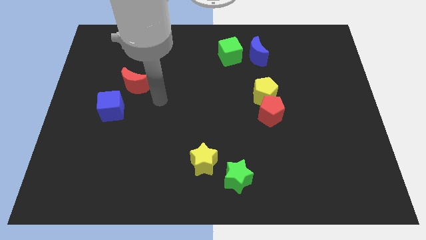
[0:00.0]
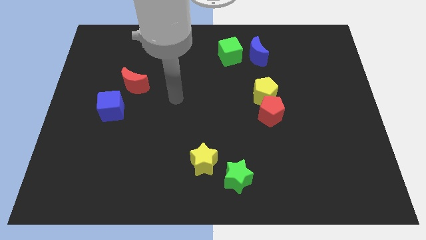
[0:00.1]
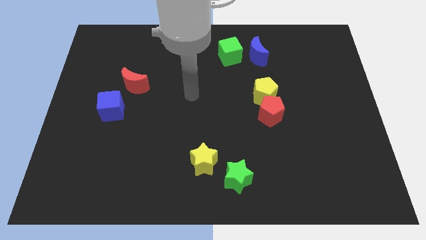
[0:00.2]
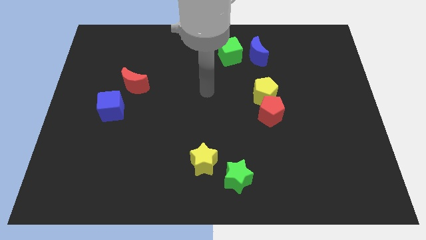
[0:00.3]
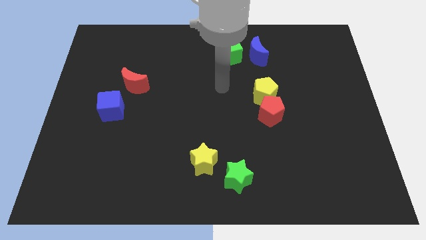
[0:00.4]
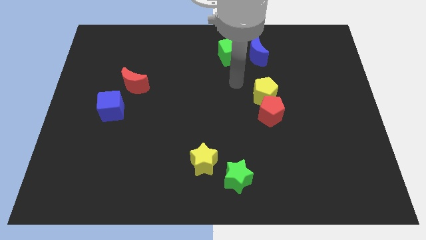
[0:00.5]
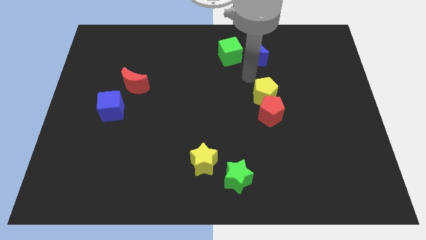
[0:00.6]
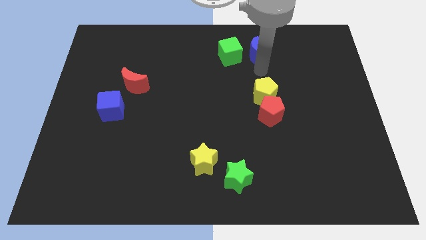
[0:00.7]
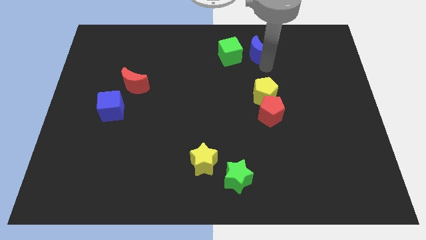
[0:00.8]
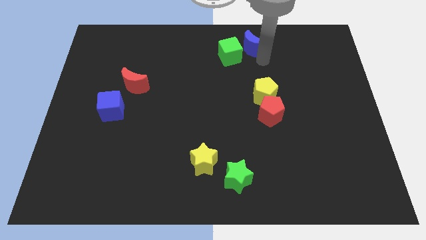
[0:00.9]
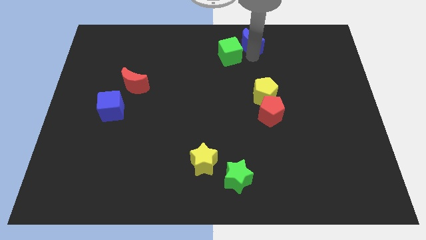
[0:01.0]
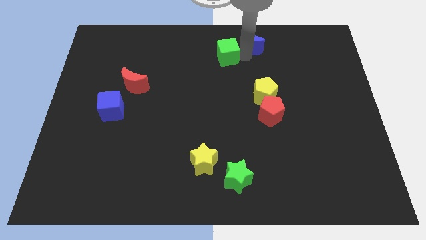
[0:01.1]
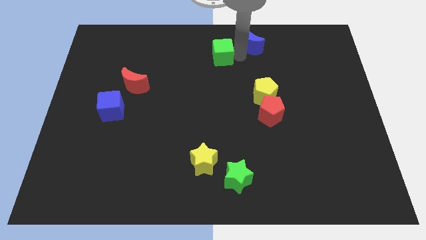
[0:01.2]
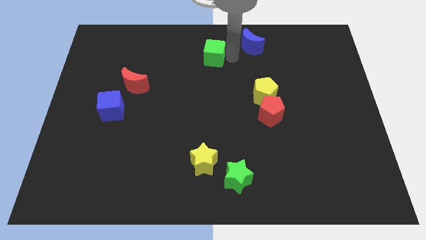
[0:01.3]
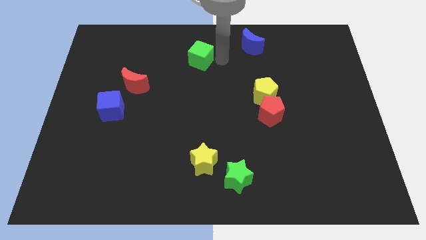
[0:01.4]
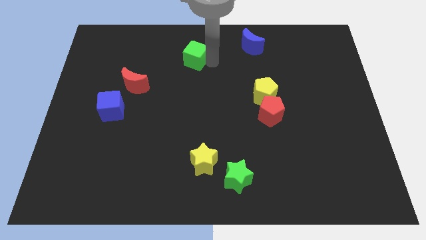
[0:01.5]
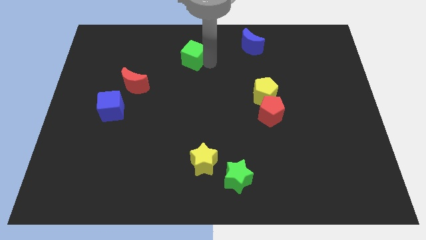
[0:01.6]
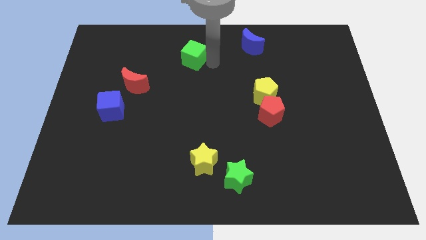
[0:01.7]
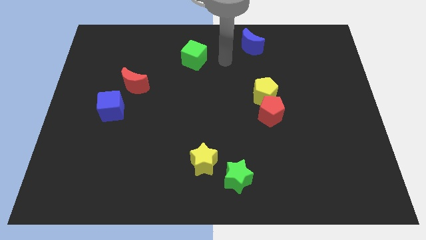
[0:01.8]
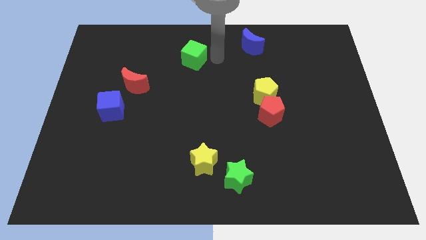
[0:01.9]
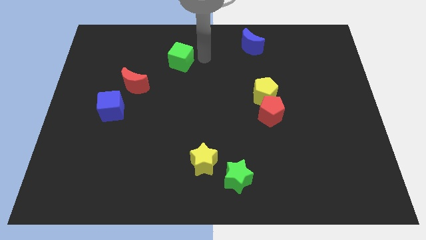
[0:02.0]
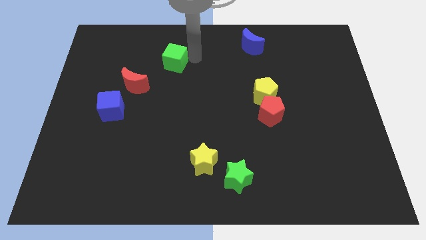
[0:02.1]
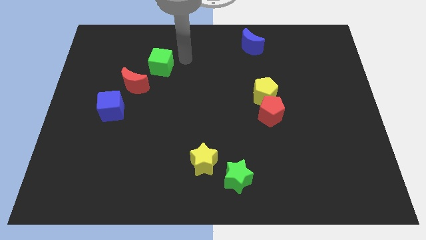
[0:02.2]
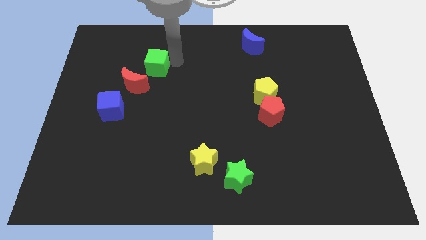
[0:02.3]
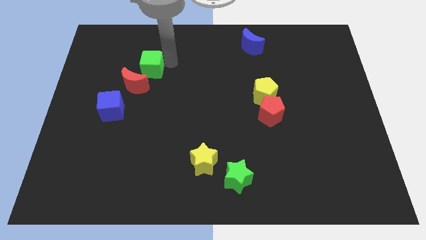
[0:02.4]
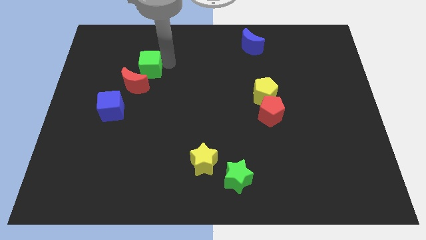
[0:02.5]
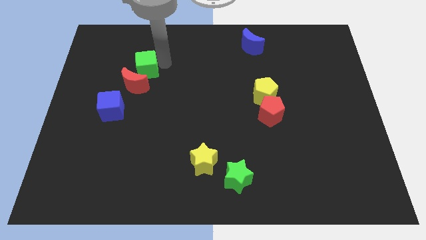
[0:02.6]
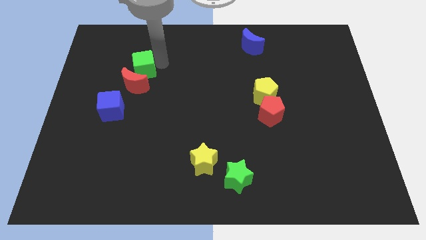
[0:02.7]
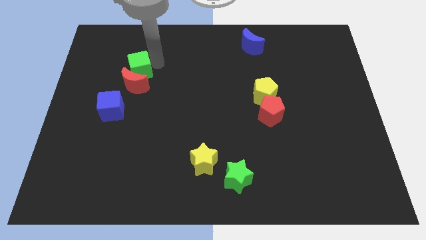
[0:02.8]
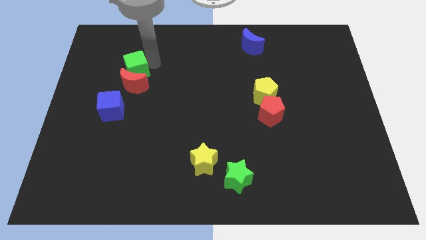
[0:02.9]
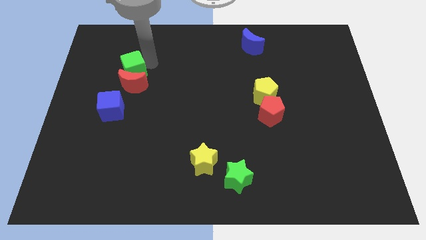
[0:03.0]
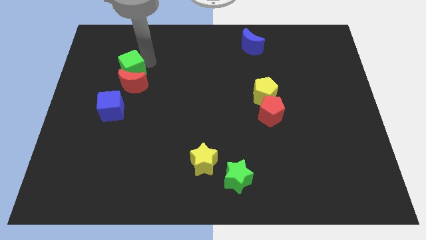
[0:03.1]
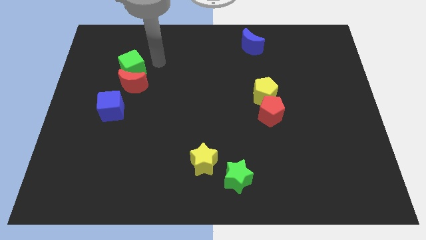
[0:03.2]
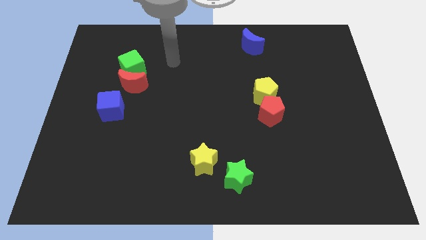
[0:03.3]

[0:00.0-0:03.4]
separate the green cube from the blue moon

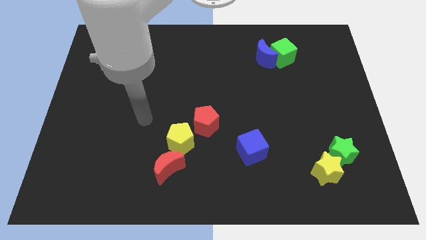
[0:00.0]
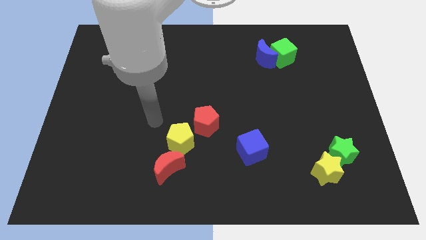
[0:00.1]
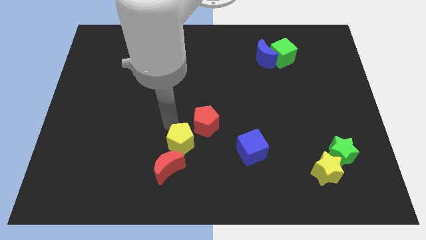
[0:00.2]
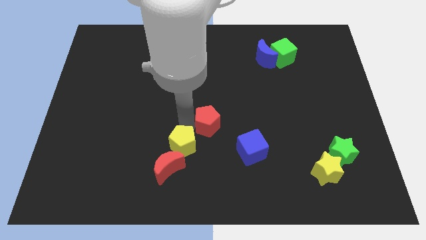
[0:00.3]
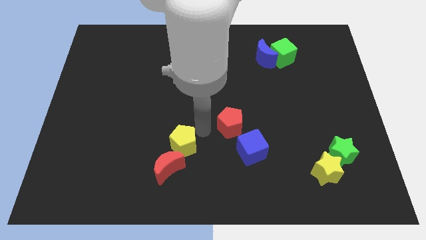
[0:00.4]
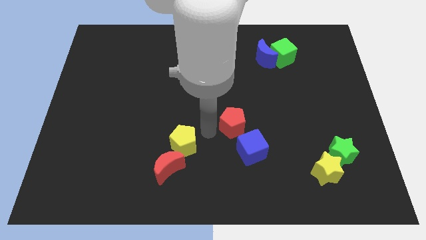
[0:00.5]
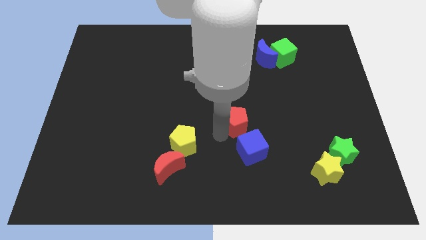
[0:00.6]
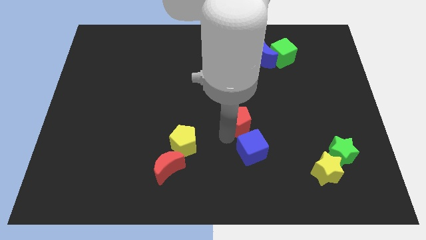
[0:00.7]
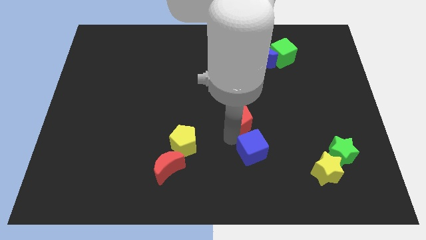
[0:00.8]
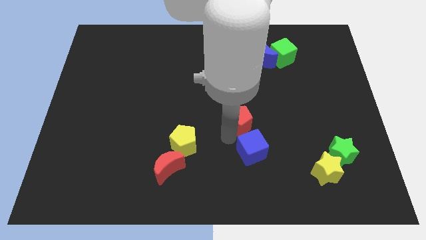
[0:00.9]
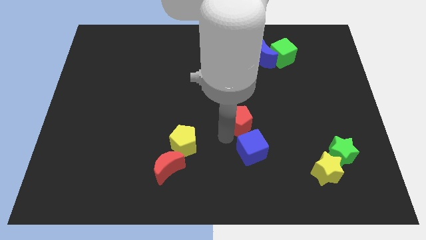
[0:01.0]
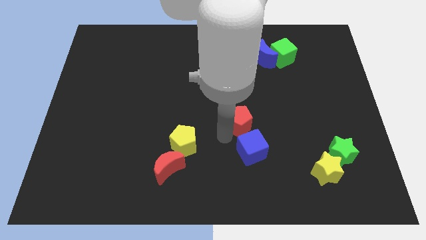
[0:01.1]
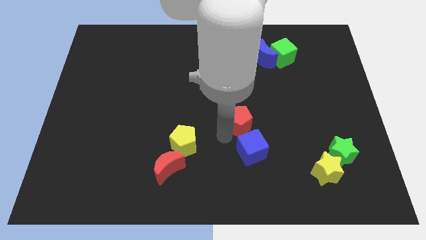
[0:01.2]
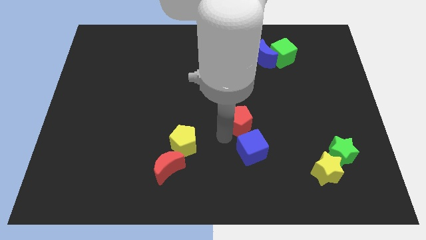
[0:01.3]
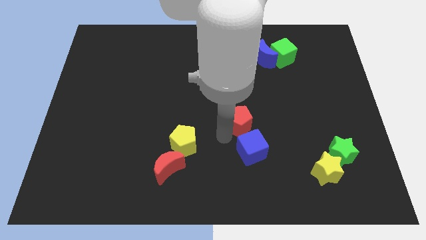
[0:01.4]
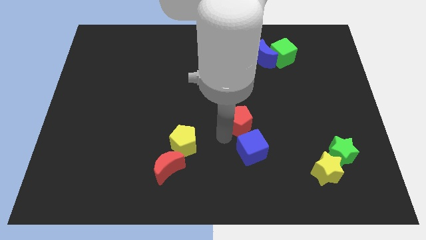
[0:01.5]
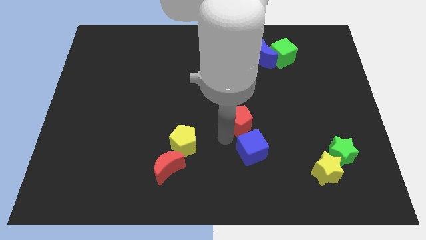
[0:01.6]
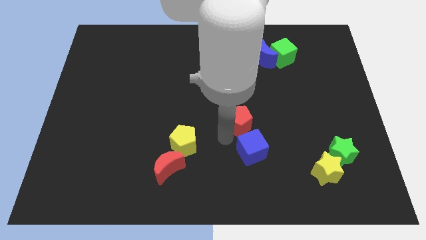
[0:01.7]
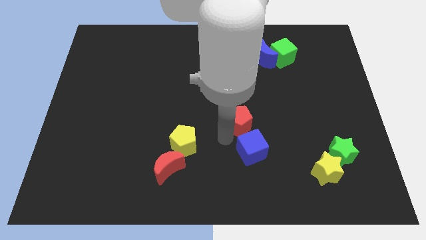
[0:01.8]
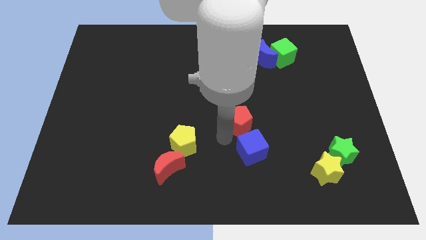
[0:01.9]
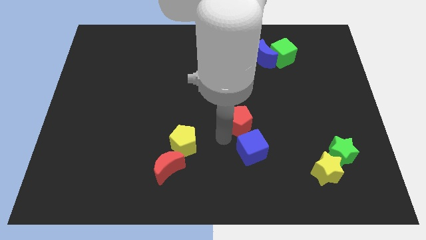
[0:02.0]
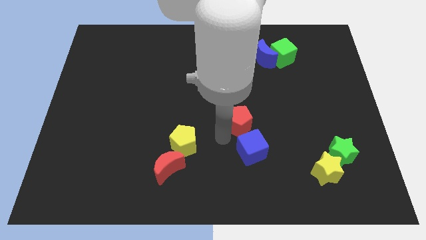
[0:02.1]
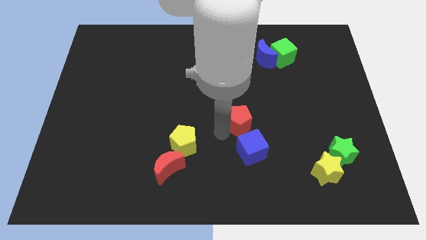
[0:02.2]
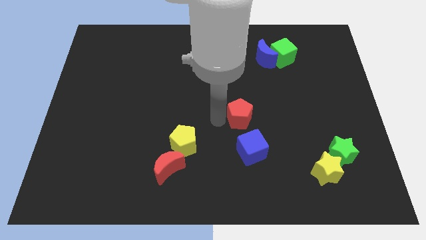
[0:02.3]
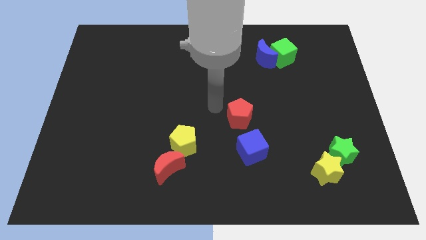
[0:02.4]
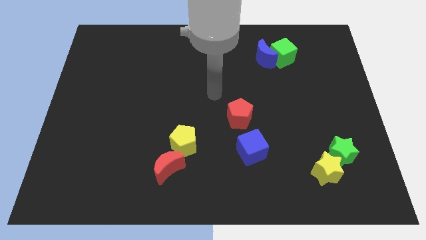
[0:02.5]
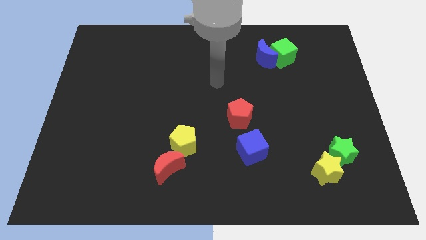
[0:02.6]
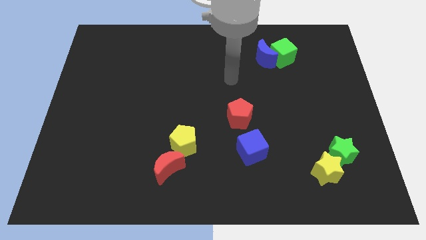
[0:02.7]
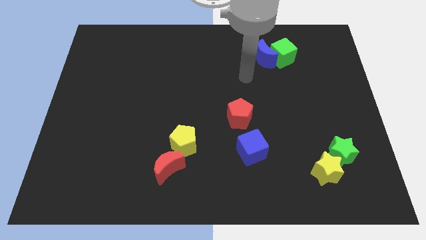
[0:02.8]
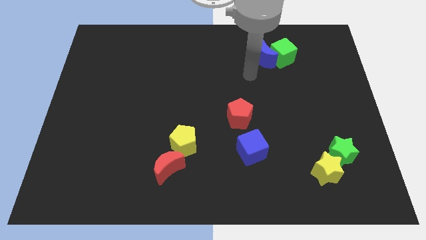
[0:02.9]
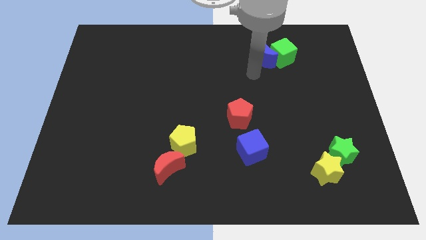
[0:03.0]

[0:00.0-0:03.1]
place the arm diagonal to the blue moon

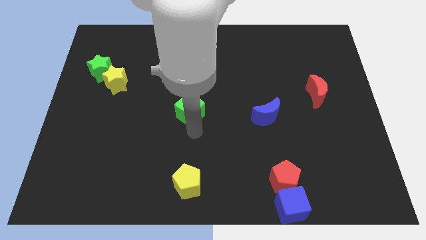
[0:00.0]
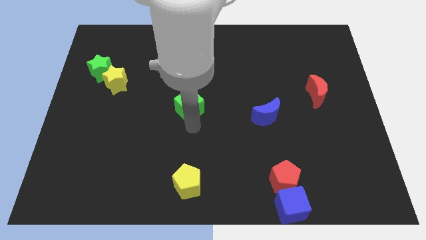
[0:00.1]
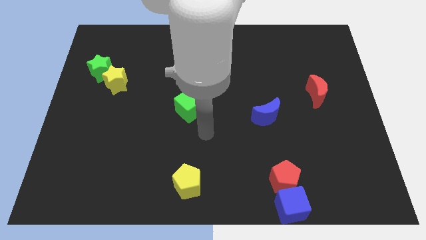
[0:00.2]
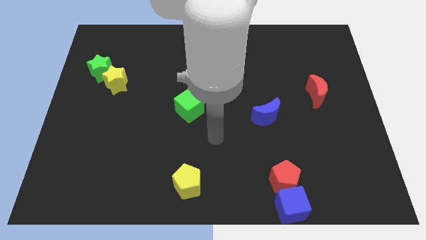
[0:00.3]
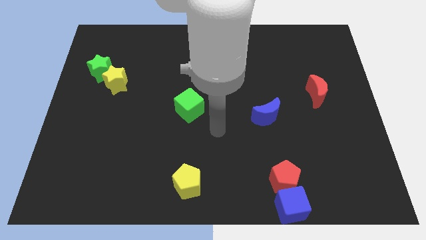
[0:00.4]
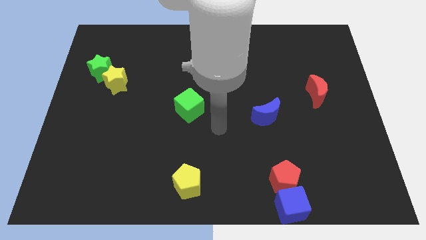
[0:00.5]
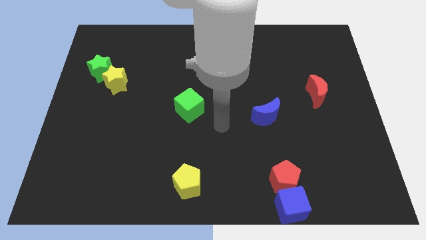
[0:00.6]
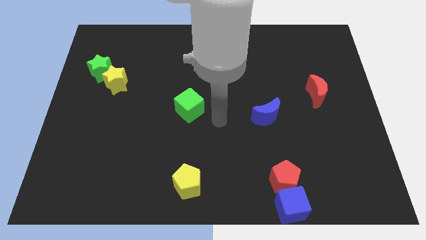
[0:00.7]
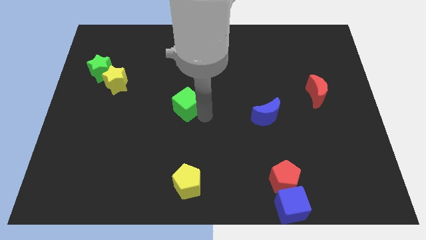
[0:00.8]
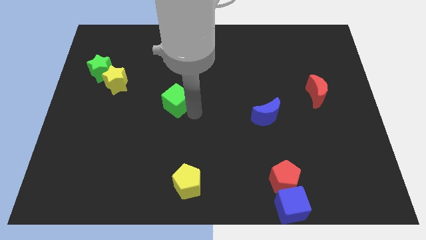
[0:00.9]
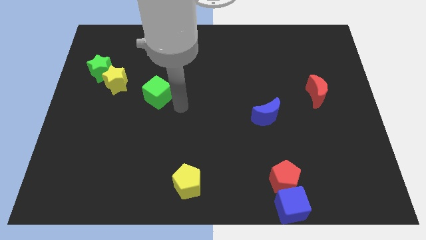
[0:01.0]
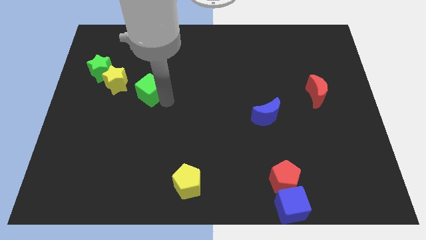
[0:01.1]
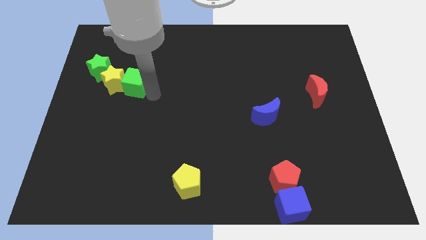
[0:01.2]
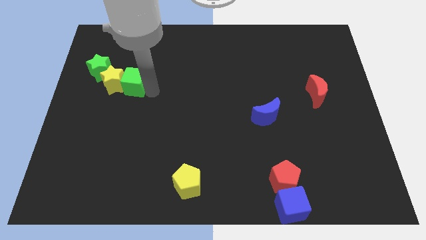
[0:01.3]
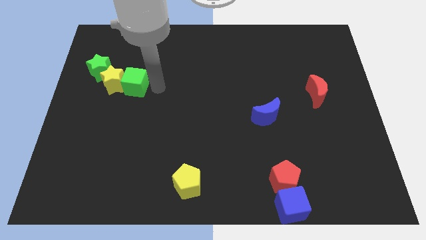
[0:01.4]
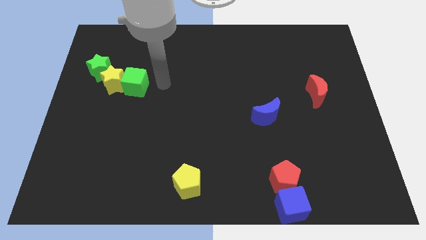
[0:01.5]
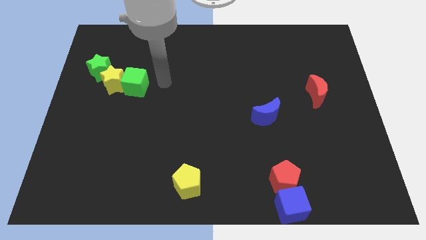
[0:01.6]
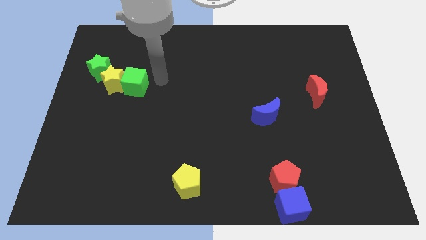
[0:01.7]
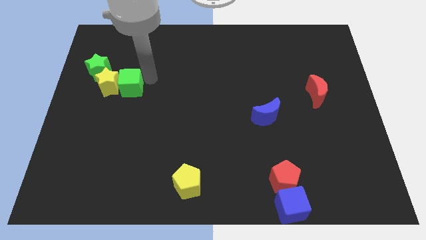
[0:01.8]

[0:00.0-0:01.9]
push green cube in to the green star yellow star

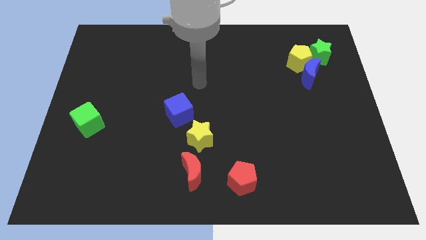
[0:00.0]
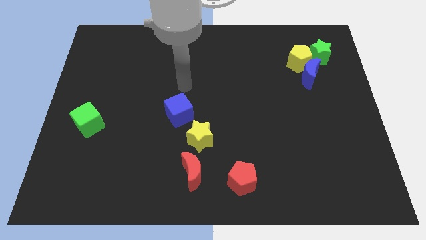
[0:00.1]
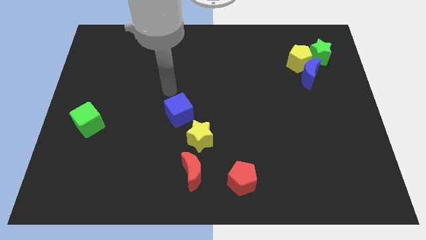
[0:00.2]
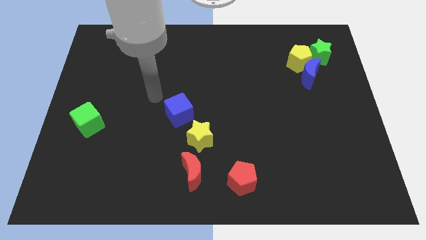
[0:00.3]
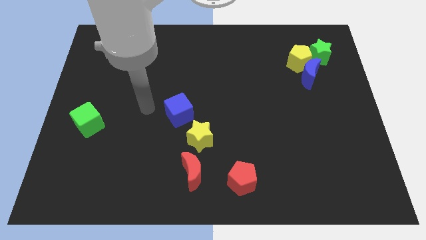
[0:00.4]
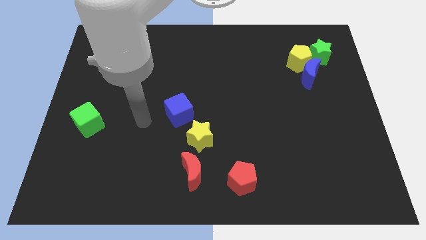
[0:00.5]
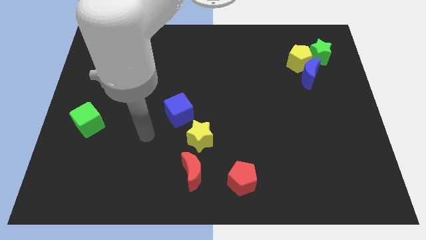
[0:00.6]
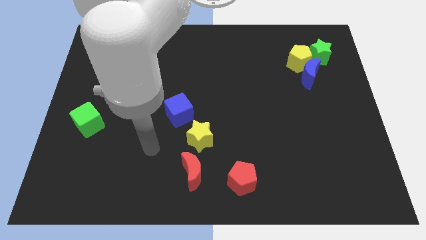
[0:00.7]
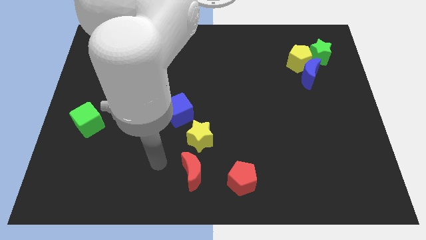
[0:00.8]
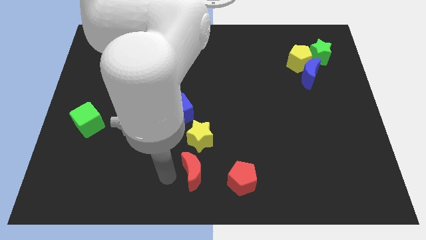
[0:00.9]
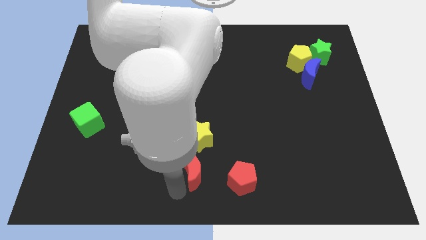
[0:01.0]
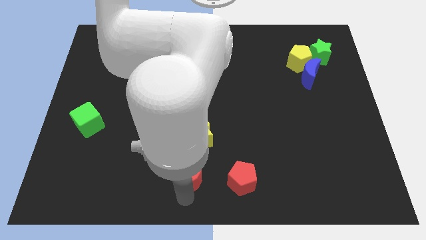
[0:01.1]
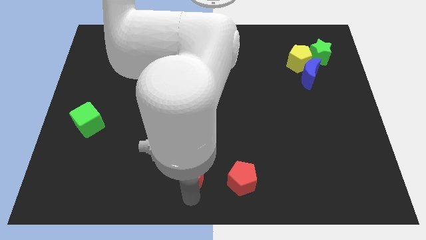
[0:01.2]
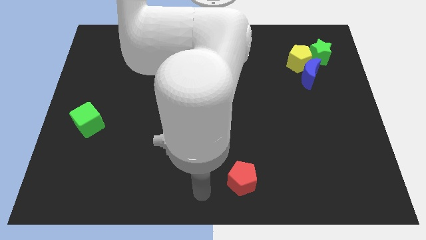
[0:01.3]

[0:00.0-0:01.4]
touch the red crescent
